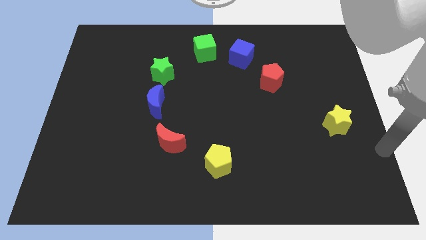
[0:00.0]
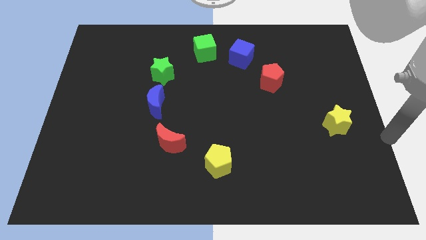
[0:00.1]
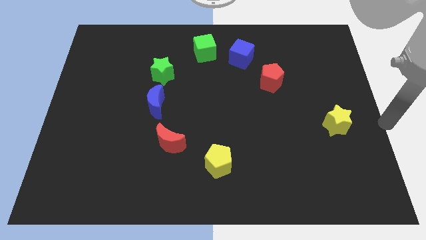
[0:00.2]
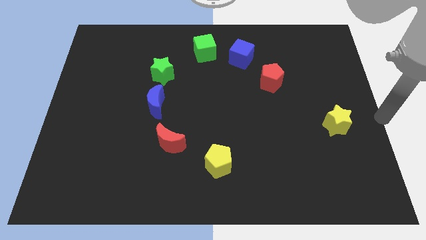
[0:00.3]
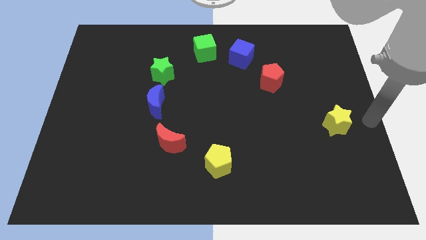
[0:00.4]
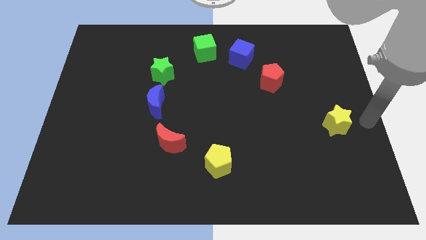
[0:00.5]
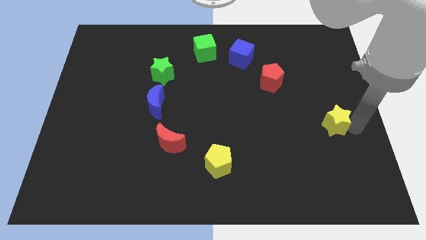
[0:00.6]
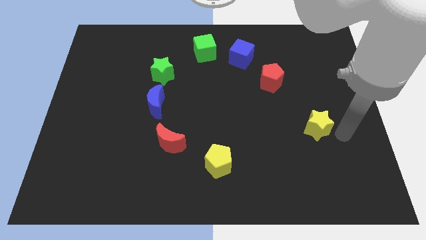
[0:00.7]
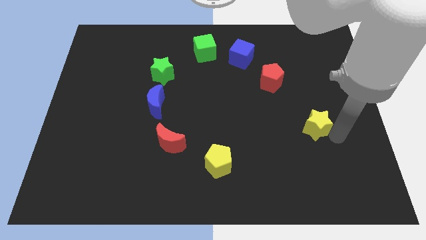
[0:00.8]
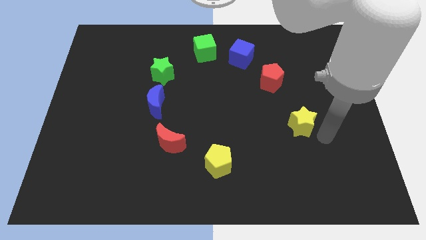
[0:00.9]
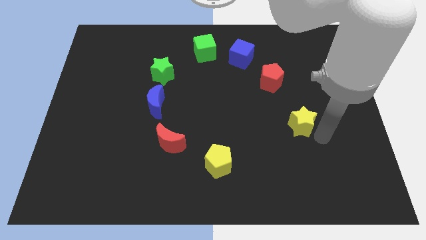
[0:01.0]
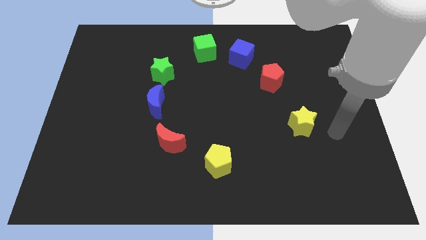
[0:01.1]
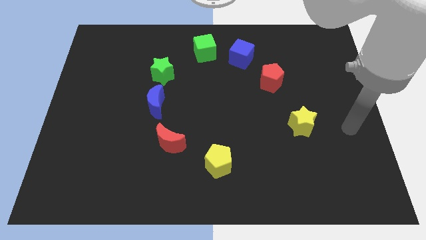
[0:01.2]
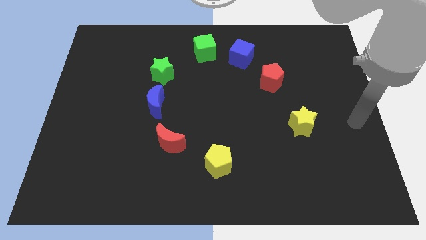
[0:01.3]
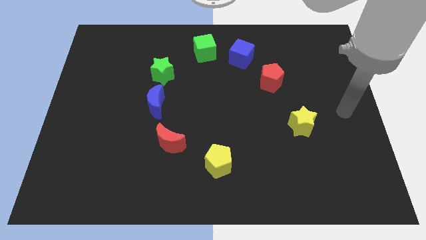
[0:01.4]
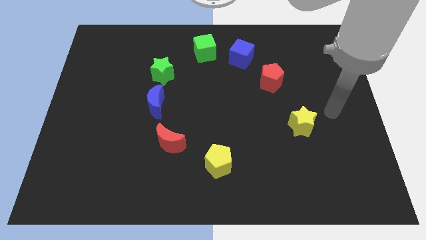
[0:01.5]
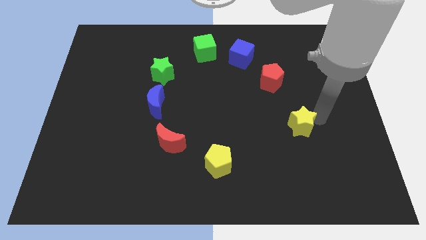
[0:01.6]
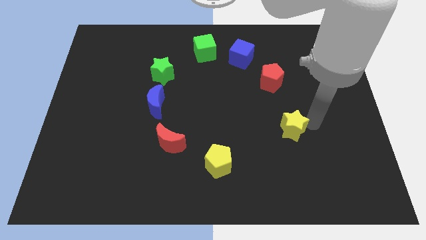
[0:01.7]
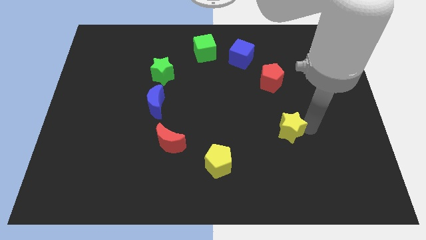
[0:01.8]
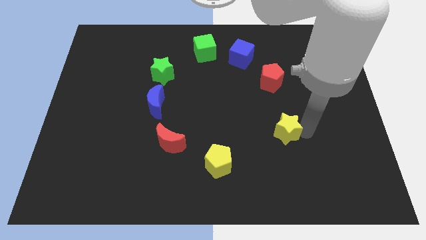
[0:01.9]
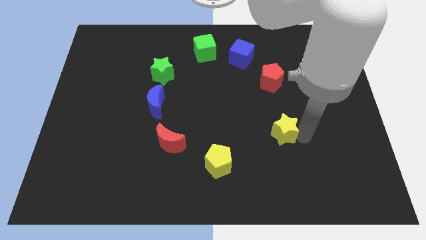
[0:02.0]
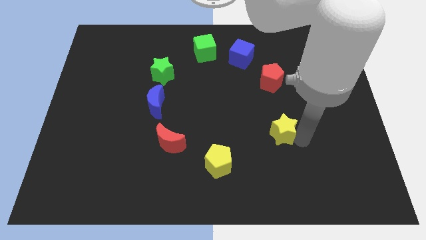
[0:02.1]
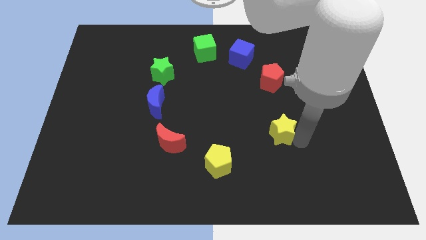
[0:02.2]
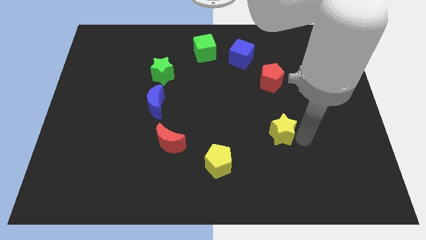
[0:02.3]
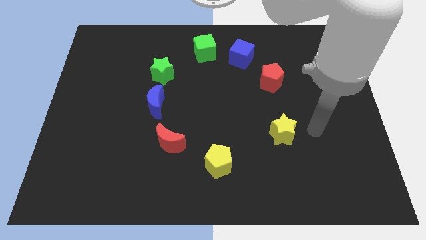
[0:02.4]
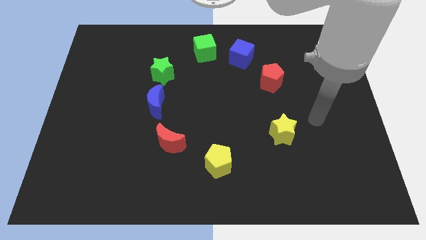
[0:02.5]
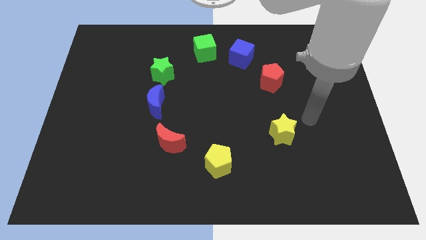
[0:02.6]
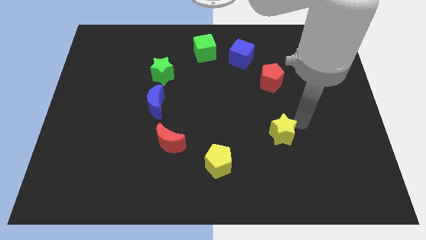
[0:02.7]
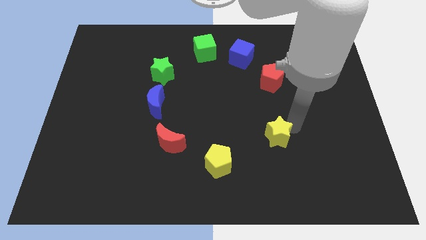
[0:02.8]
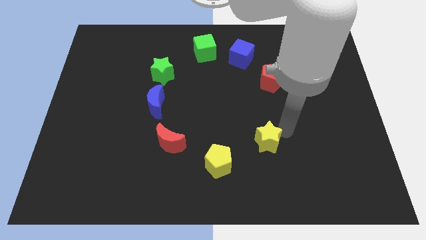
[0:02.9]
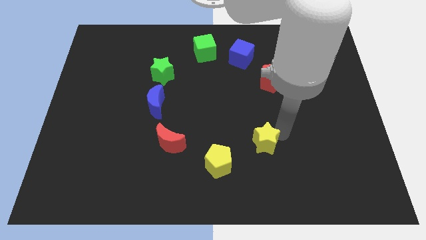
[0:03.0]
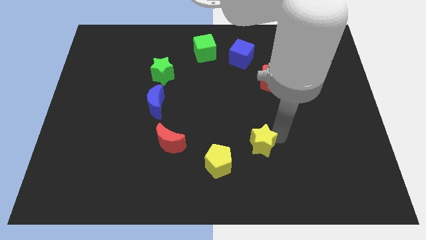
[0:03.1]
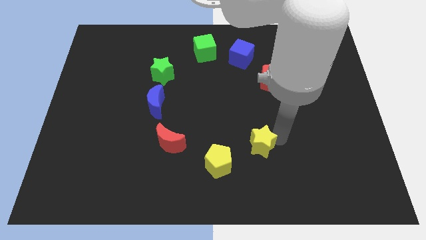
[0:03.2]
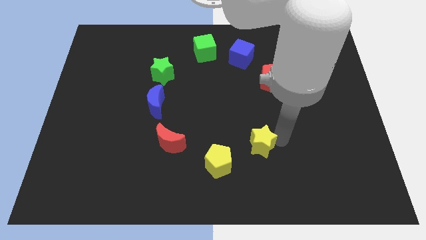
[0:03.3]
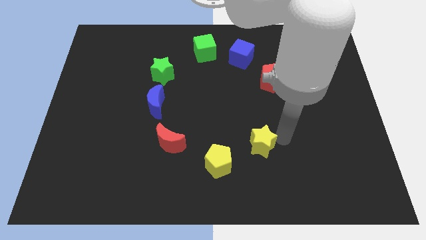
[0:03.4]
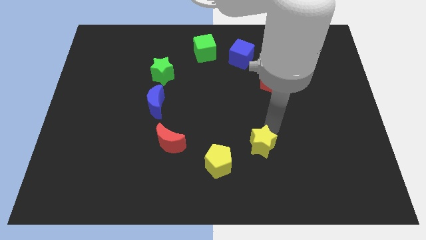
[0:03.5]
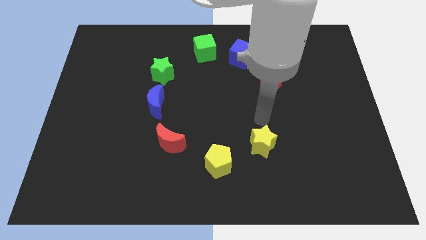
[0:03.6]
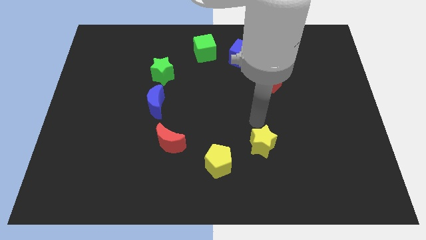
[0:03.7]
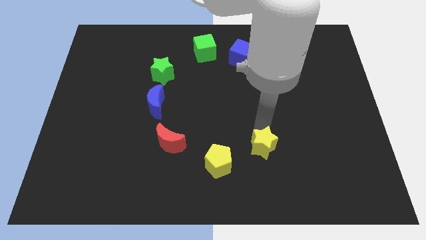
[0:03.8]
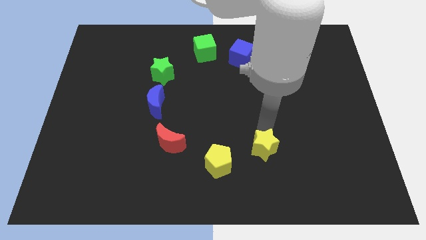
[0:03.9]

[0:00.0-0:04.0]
push the yellow star to form a circle

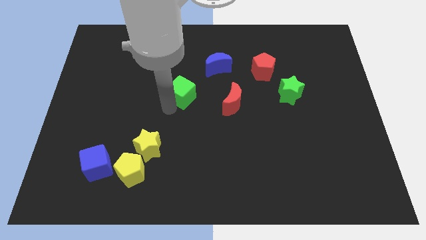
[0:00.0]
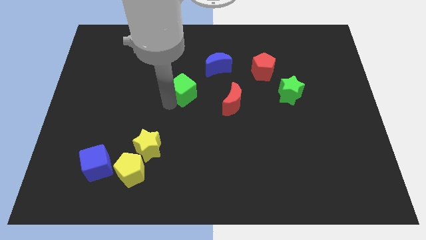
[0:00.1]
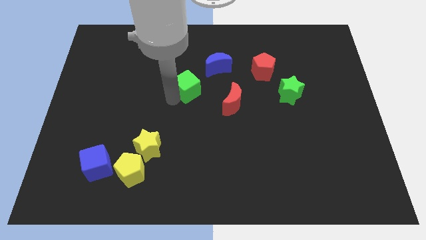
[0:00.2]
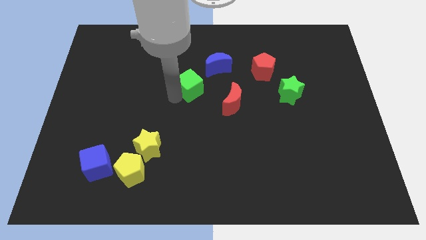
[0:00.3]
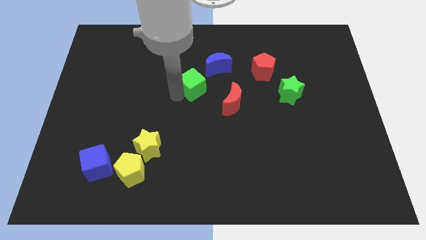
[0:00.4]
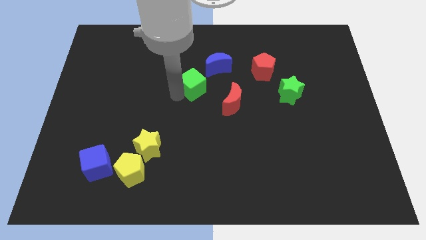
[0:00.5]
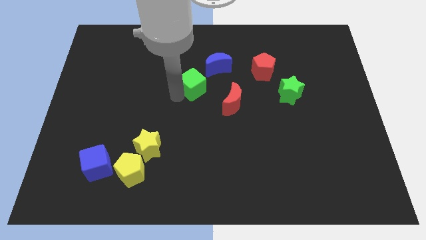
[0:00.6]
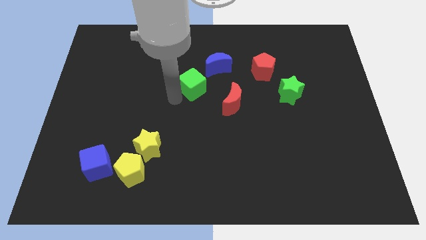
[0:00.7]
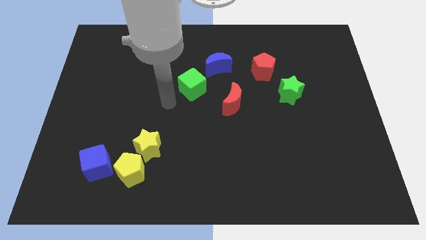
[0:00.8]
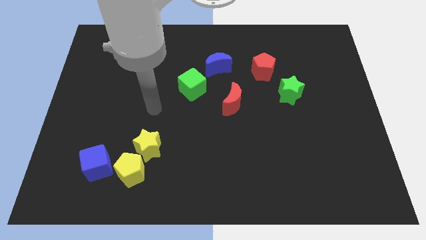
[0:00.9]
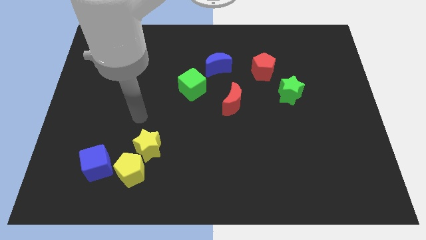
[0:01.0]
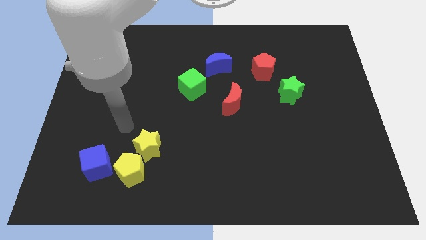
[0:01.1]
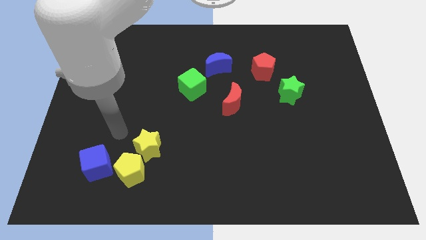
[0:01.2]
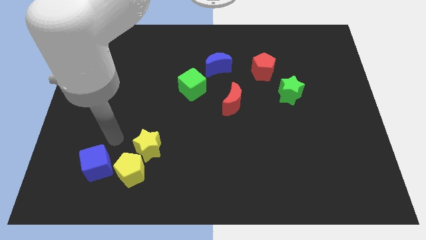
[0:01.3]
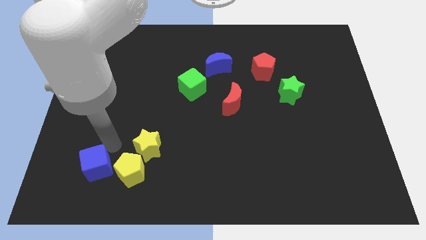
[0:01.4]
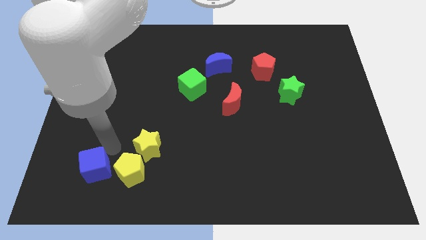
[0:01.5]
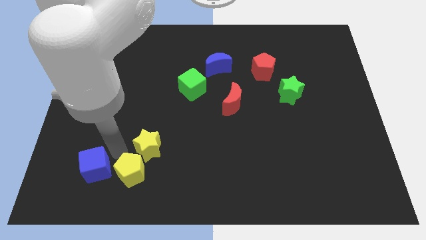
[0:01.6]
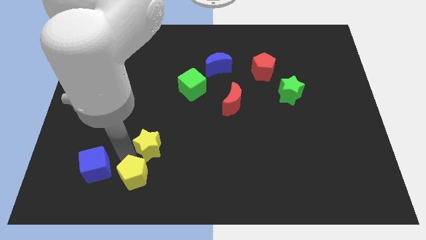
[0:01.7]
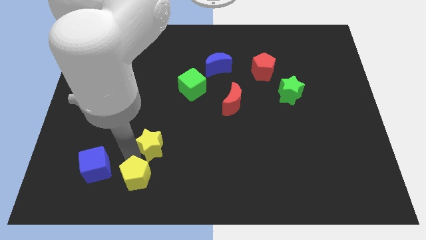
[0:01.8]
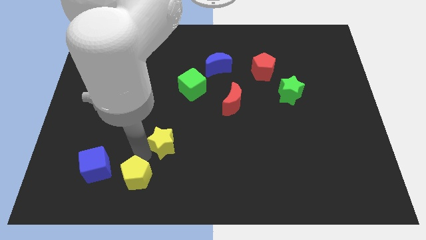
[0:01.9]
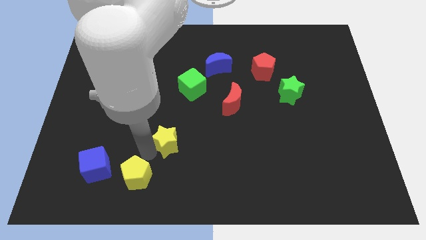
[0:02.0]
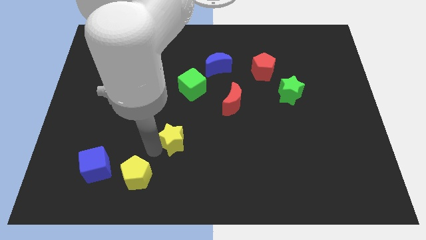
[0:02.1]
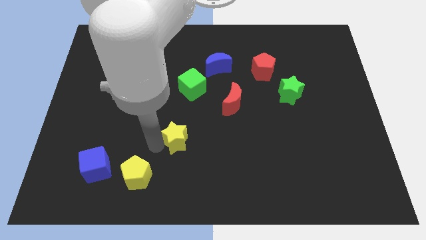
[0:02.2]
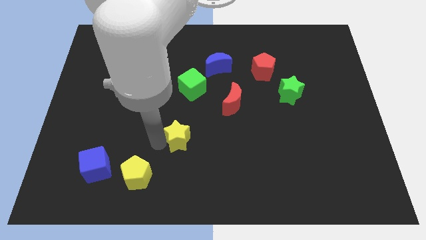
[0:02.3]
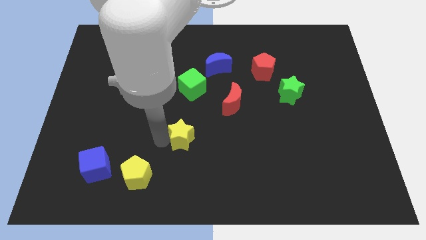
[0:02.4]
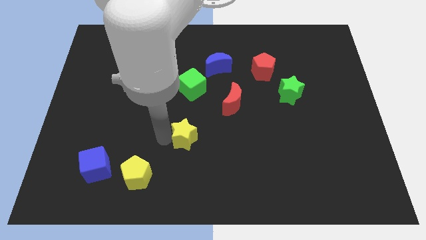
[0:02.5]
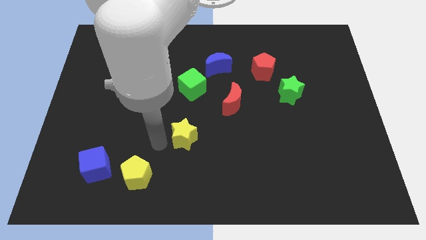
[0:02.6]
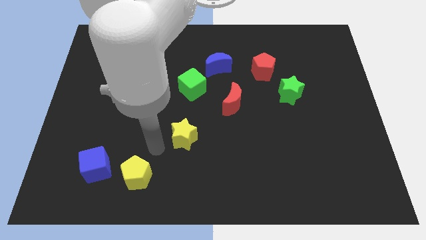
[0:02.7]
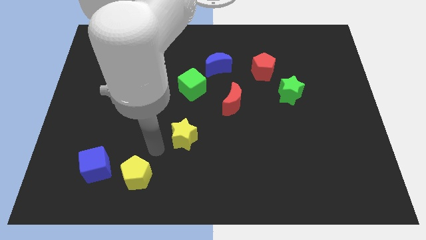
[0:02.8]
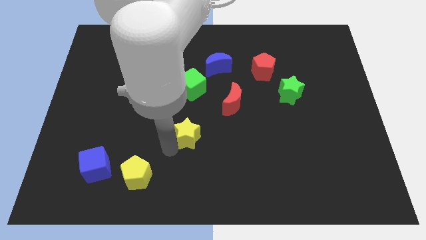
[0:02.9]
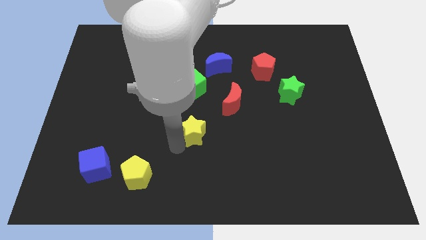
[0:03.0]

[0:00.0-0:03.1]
separate yellow star from yellow pentagon

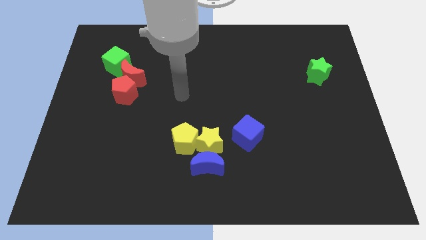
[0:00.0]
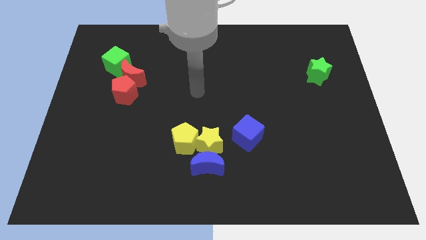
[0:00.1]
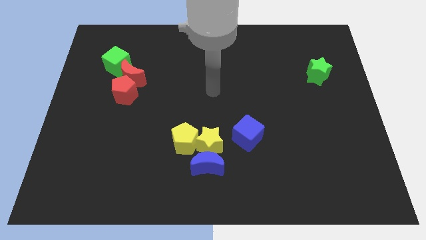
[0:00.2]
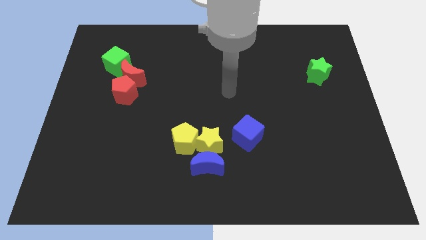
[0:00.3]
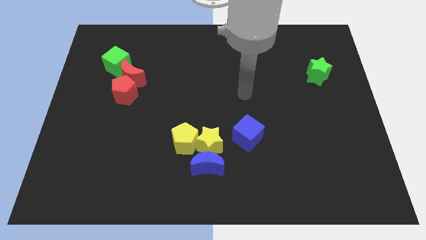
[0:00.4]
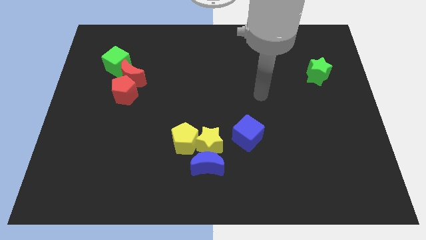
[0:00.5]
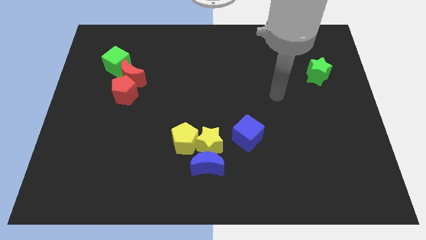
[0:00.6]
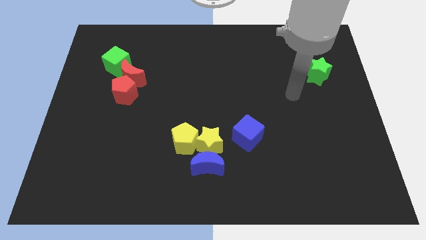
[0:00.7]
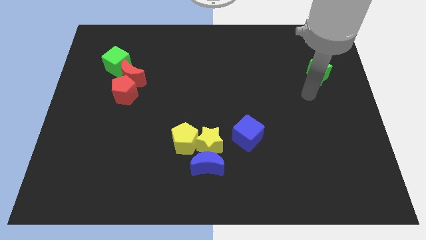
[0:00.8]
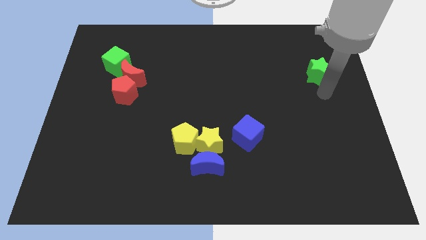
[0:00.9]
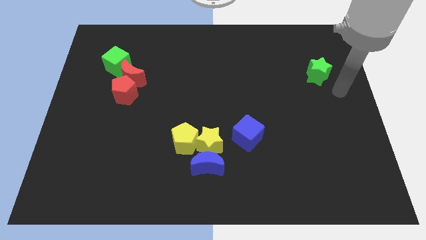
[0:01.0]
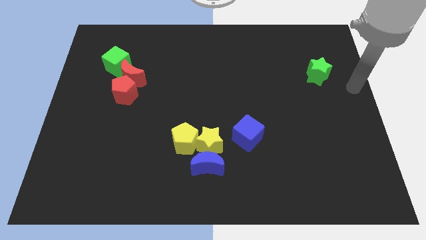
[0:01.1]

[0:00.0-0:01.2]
move the arm close to the green star

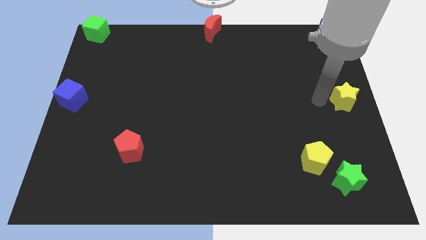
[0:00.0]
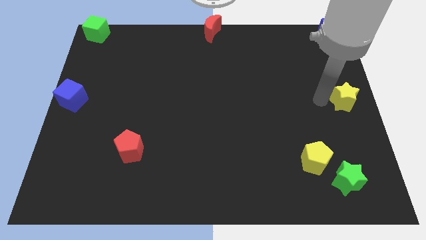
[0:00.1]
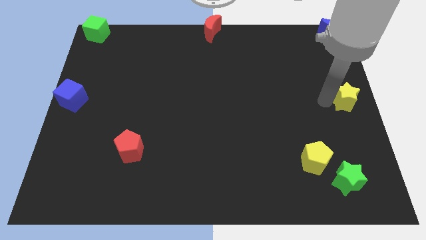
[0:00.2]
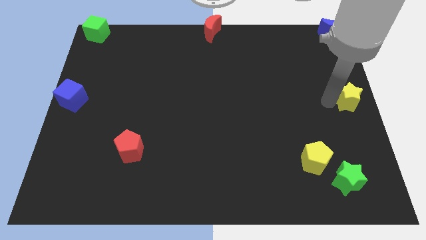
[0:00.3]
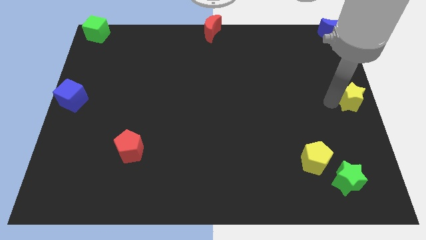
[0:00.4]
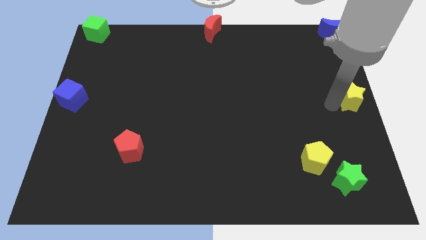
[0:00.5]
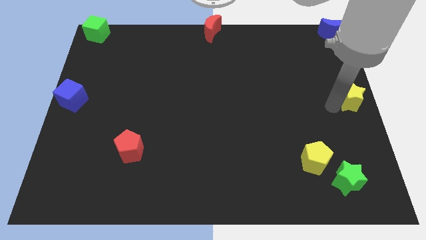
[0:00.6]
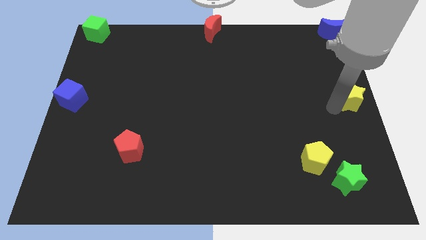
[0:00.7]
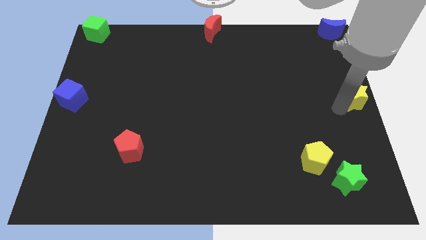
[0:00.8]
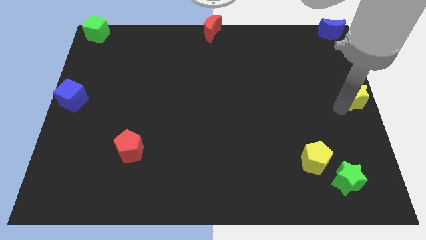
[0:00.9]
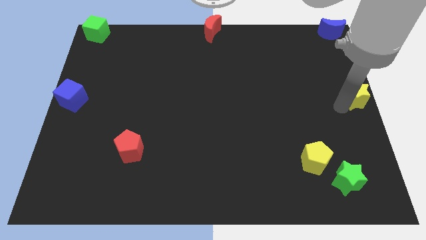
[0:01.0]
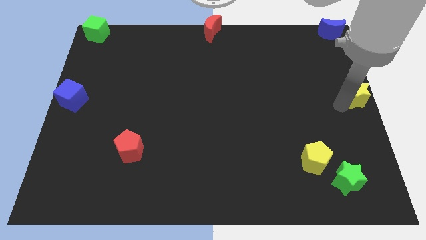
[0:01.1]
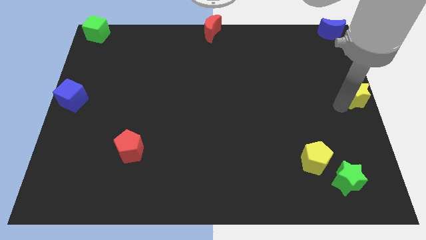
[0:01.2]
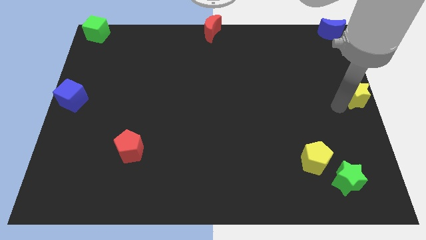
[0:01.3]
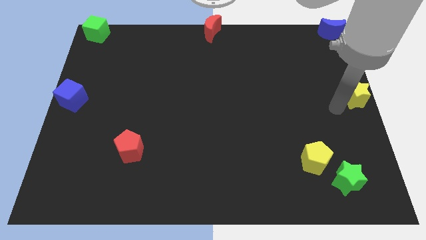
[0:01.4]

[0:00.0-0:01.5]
drag the yellow star to the center right of the board
